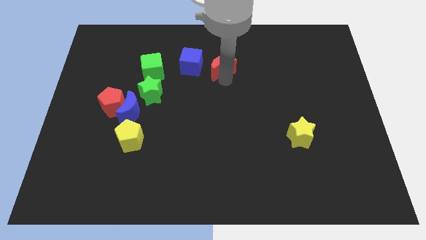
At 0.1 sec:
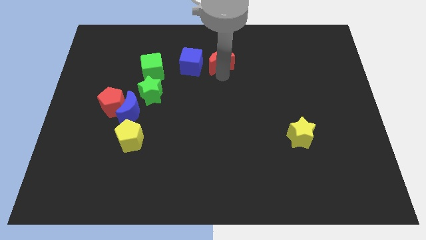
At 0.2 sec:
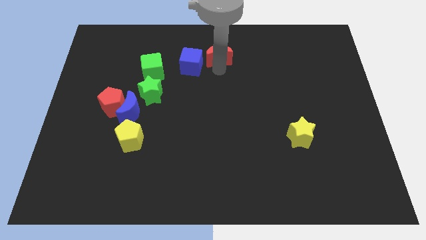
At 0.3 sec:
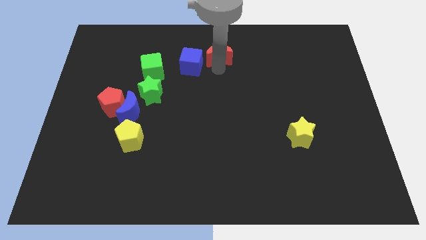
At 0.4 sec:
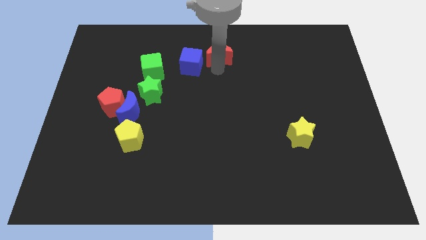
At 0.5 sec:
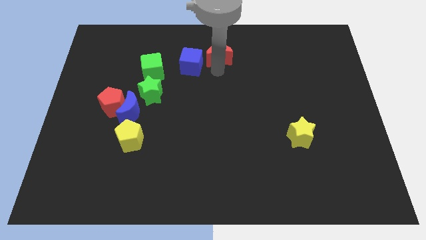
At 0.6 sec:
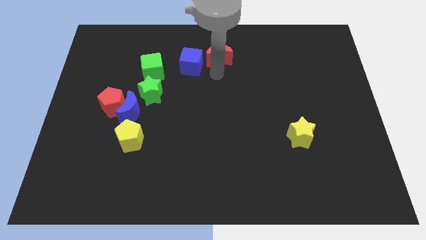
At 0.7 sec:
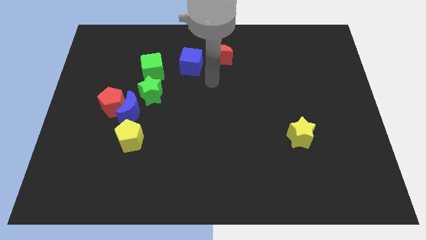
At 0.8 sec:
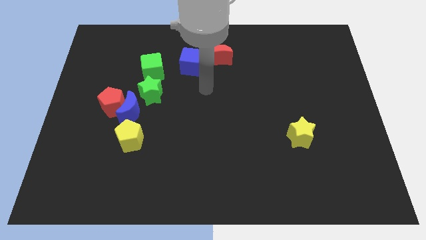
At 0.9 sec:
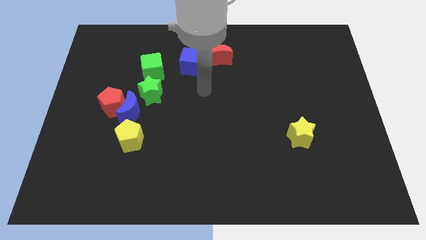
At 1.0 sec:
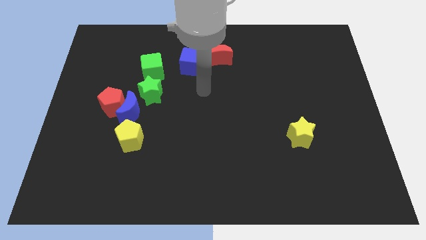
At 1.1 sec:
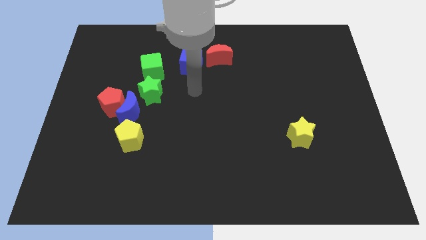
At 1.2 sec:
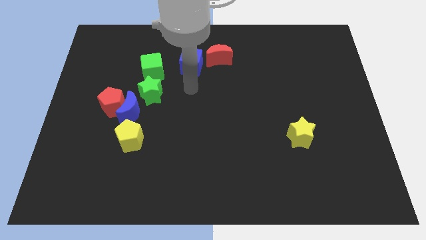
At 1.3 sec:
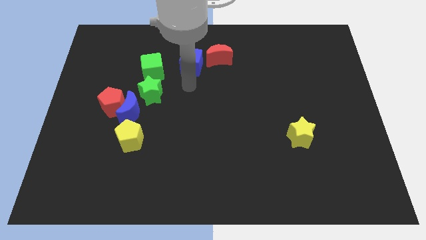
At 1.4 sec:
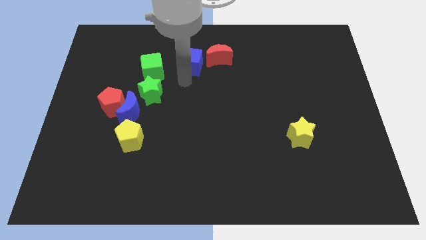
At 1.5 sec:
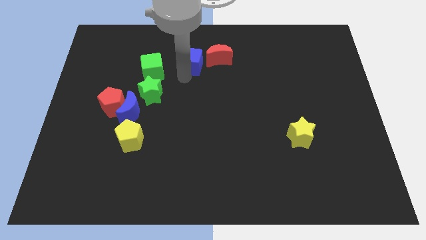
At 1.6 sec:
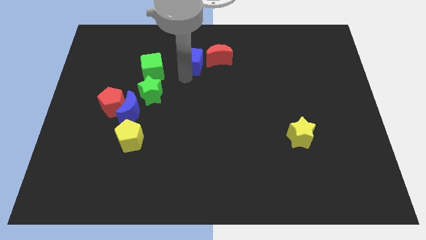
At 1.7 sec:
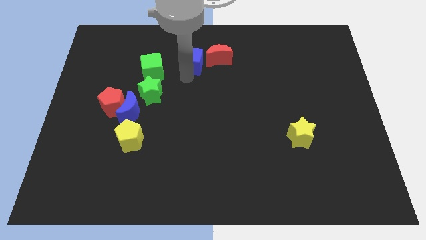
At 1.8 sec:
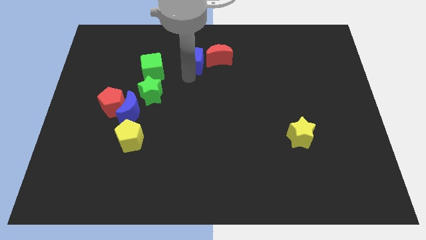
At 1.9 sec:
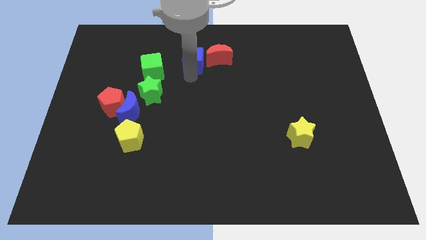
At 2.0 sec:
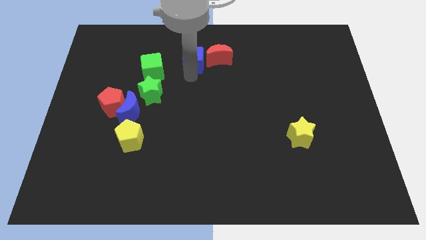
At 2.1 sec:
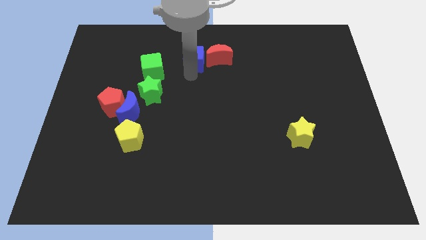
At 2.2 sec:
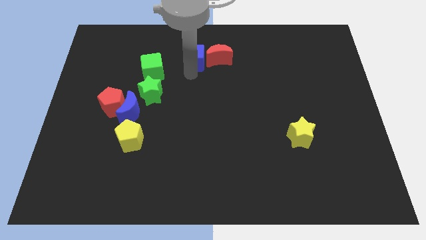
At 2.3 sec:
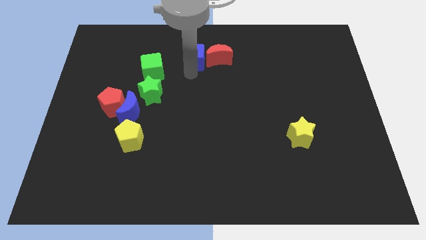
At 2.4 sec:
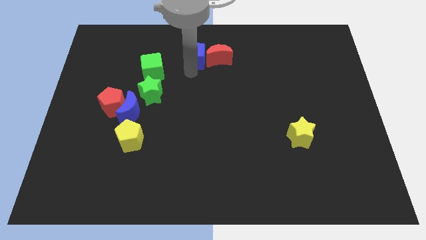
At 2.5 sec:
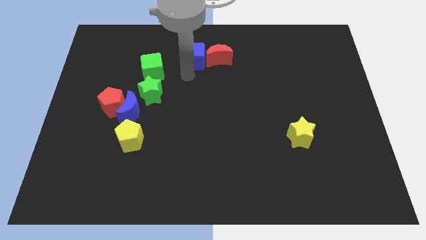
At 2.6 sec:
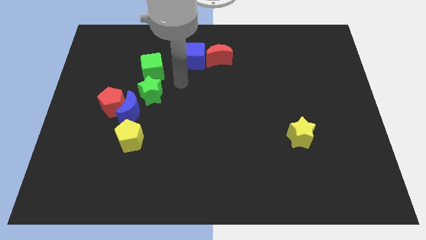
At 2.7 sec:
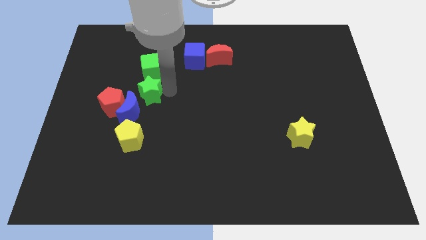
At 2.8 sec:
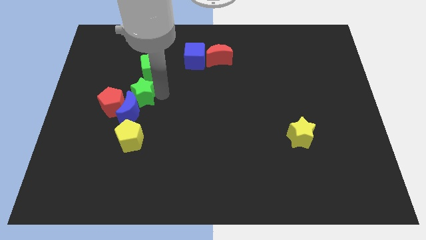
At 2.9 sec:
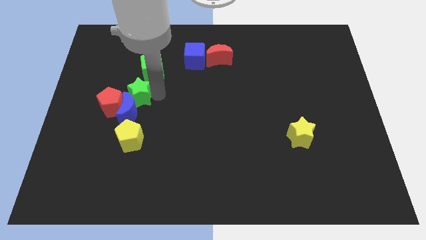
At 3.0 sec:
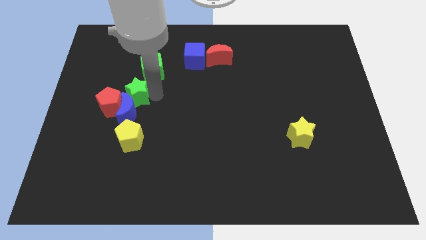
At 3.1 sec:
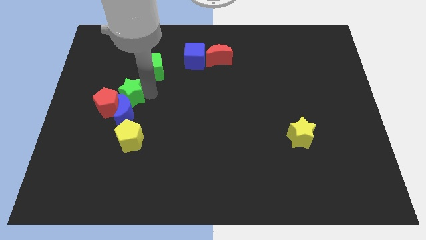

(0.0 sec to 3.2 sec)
adjust the blue cube to the left side of the red moon

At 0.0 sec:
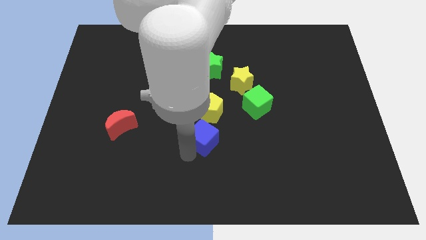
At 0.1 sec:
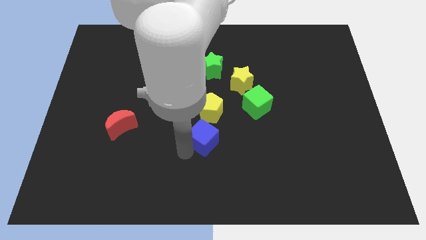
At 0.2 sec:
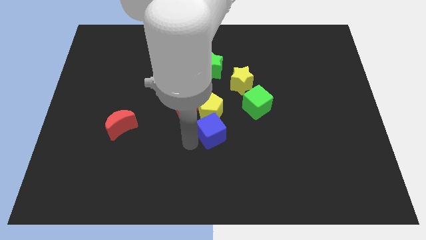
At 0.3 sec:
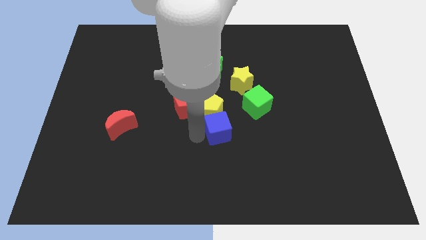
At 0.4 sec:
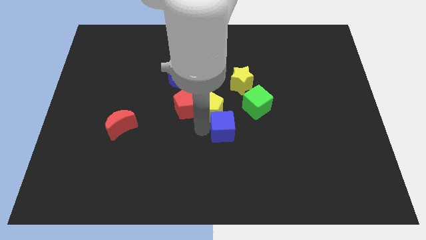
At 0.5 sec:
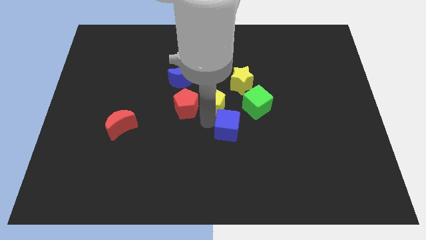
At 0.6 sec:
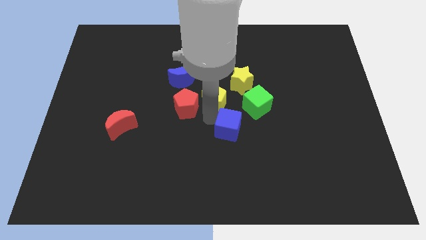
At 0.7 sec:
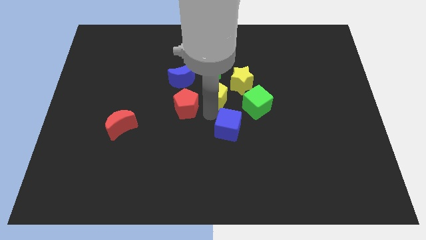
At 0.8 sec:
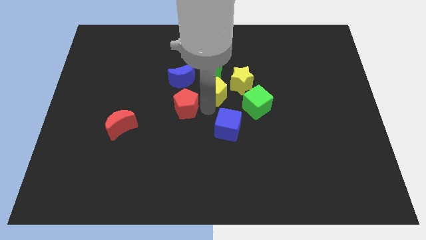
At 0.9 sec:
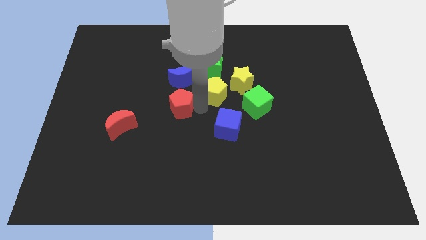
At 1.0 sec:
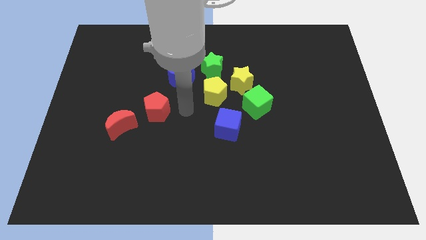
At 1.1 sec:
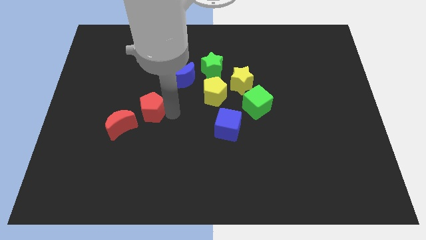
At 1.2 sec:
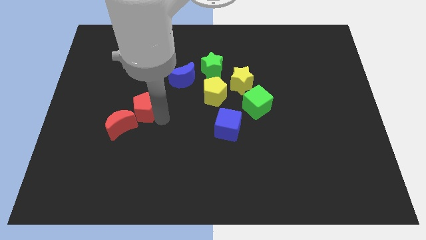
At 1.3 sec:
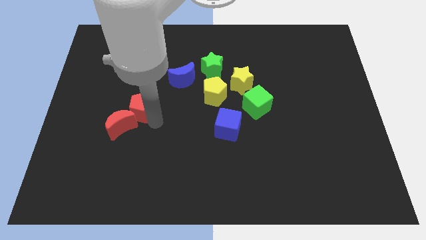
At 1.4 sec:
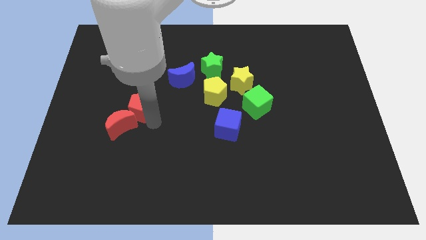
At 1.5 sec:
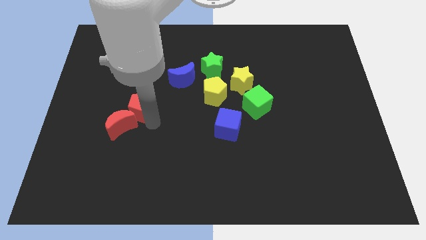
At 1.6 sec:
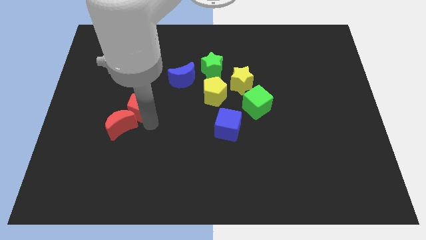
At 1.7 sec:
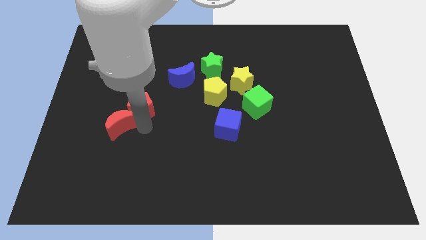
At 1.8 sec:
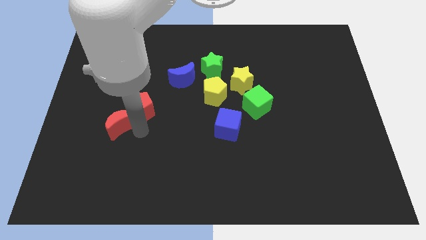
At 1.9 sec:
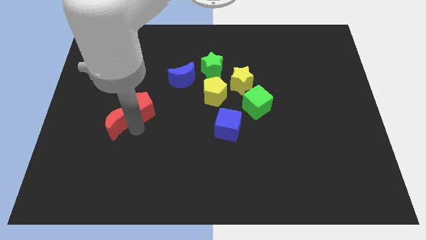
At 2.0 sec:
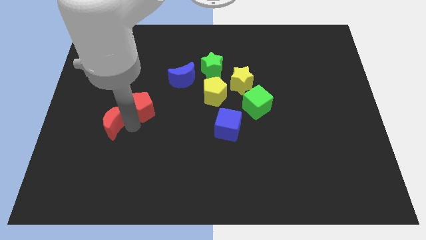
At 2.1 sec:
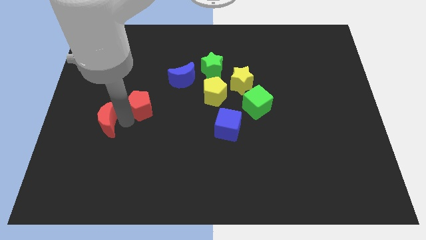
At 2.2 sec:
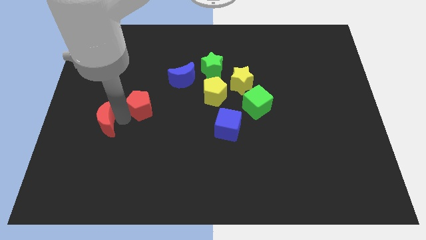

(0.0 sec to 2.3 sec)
move the red pentagon into the red moon

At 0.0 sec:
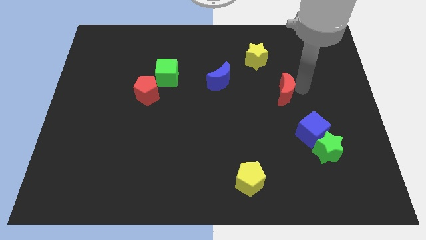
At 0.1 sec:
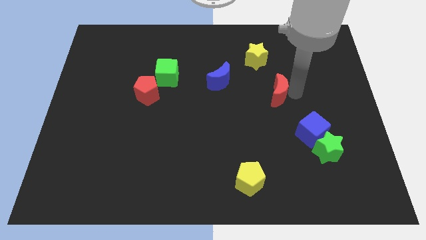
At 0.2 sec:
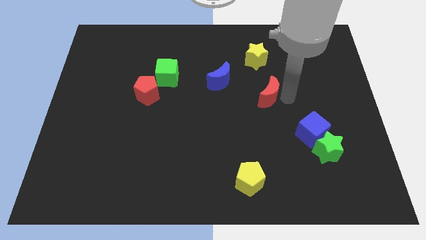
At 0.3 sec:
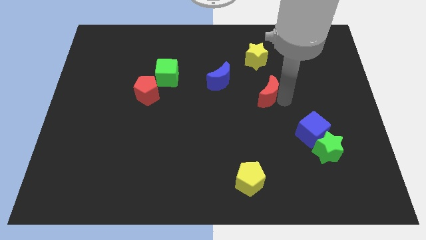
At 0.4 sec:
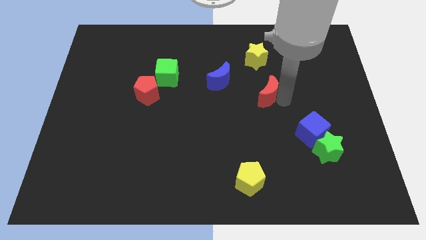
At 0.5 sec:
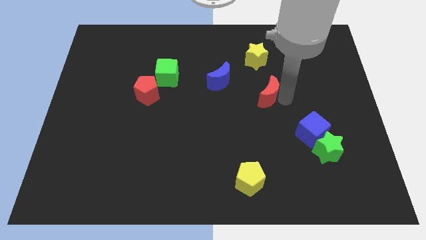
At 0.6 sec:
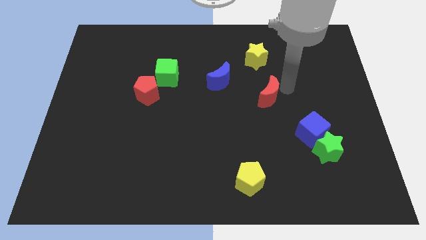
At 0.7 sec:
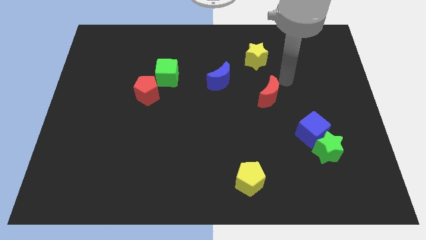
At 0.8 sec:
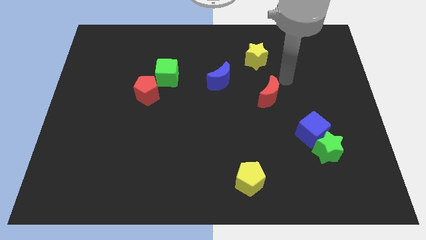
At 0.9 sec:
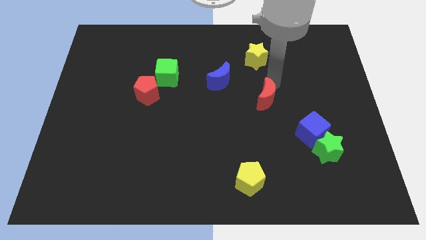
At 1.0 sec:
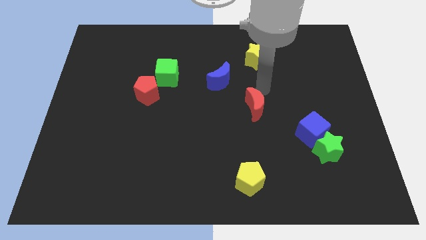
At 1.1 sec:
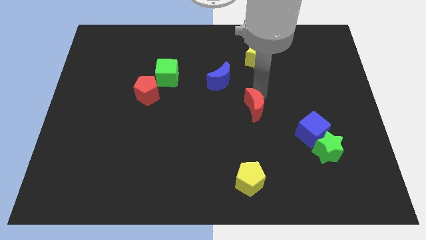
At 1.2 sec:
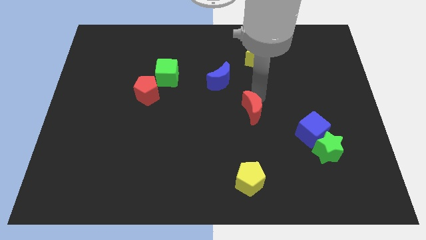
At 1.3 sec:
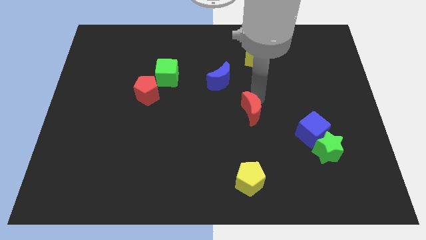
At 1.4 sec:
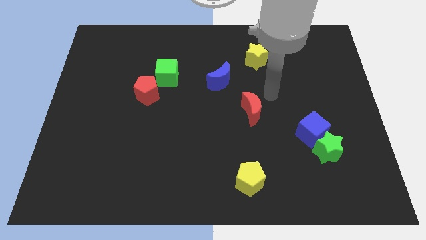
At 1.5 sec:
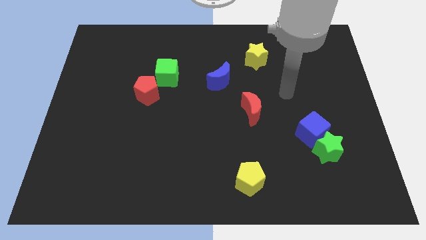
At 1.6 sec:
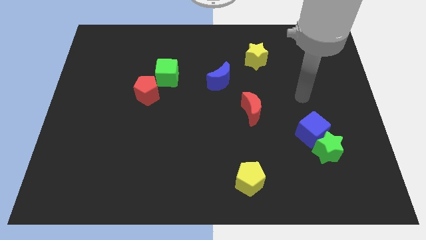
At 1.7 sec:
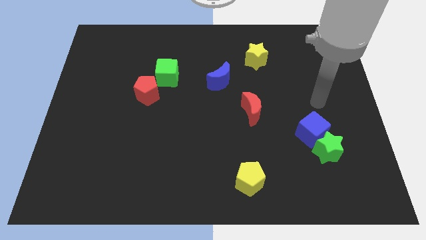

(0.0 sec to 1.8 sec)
move red moon to the center of the board

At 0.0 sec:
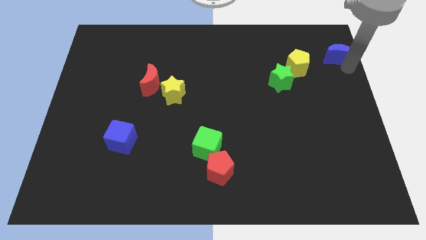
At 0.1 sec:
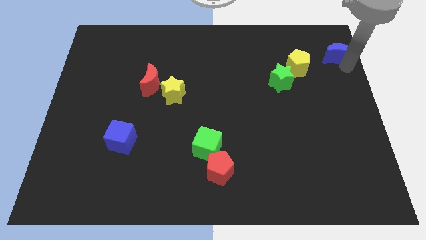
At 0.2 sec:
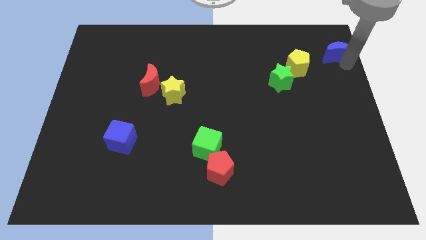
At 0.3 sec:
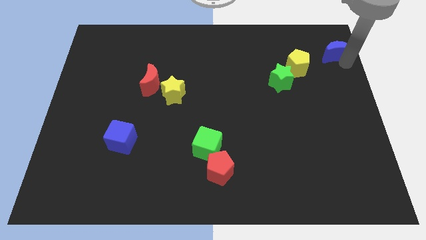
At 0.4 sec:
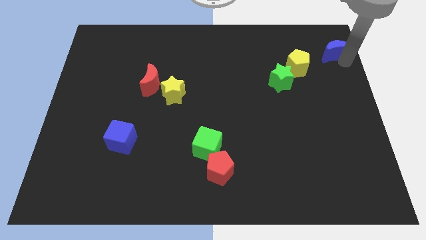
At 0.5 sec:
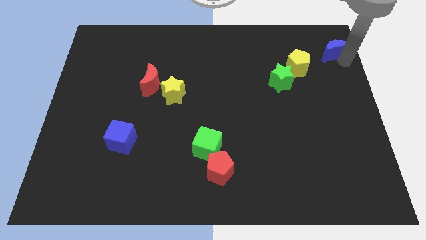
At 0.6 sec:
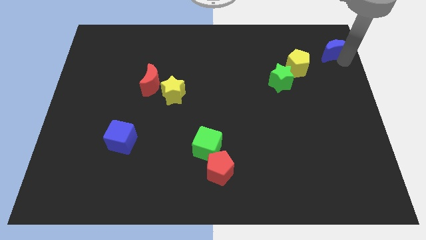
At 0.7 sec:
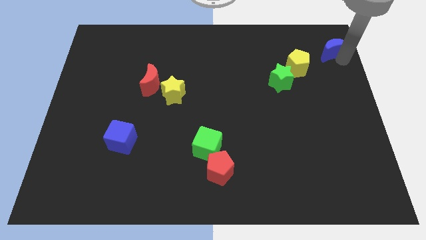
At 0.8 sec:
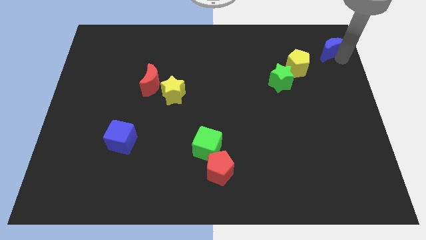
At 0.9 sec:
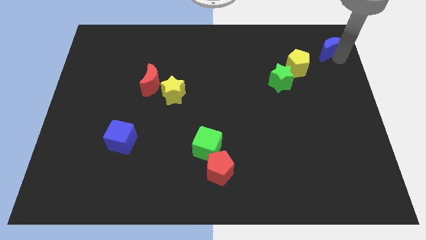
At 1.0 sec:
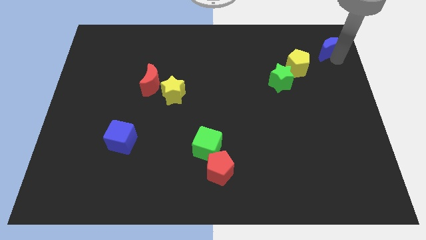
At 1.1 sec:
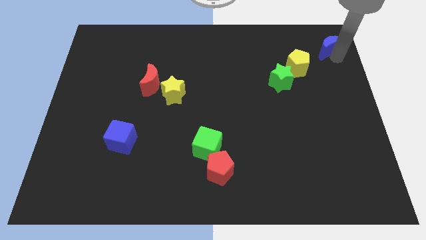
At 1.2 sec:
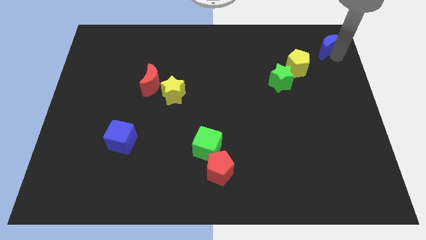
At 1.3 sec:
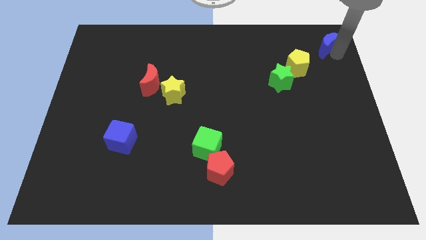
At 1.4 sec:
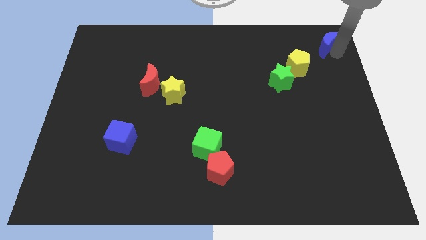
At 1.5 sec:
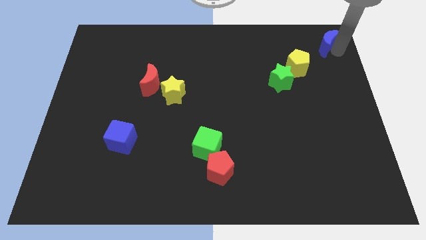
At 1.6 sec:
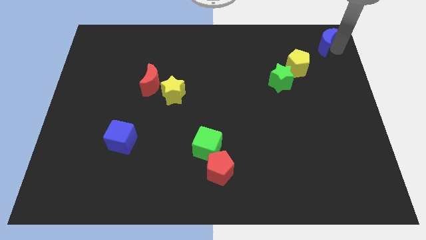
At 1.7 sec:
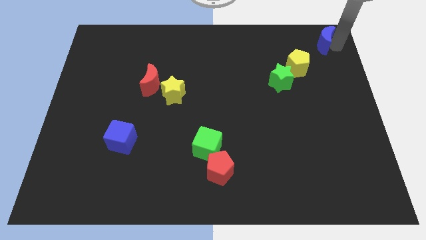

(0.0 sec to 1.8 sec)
move the blue moon to the top right corner
